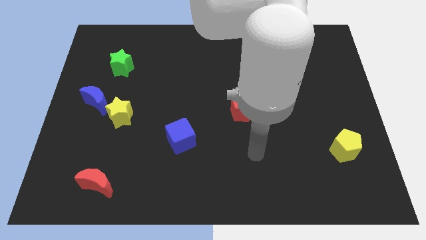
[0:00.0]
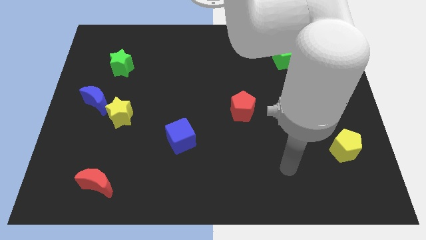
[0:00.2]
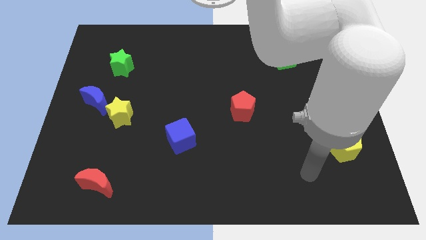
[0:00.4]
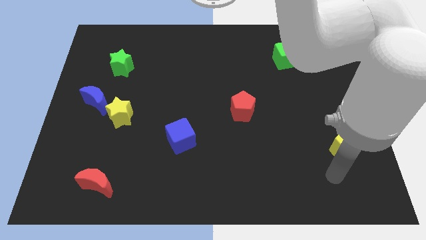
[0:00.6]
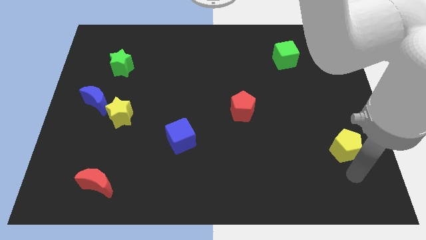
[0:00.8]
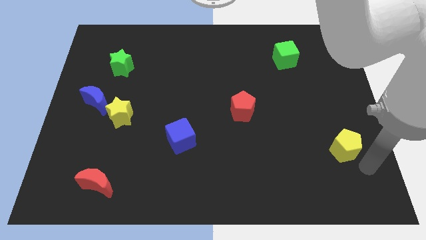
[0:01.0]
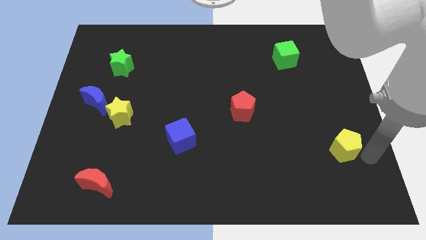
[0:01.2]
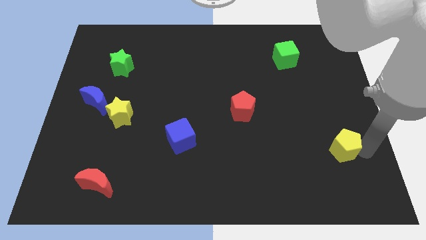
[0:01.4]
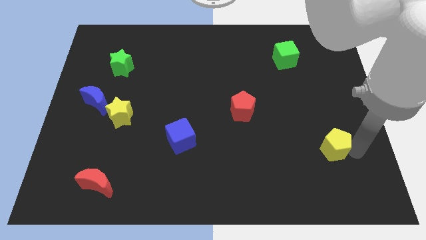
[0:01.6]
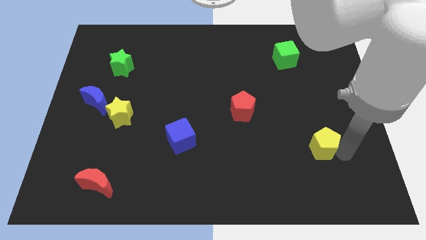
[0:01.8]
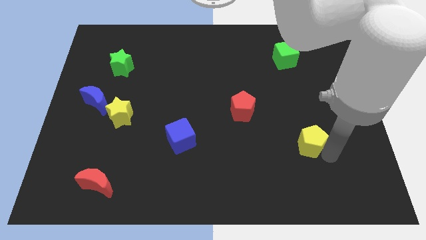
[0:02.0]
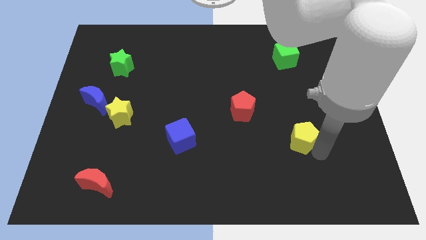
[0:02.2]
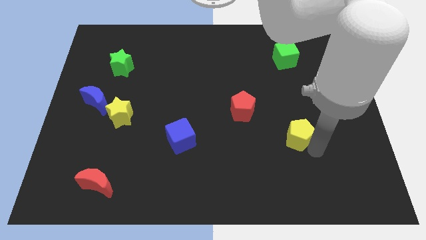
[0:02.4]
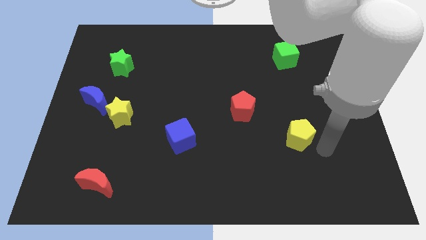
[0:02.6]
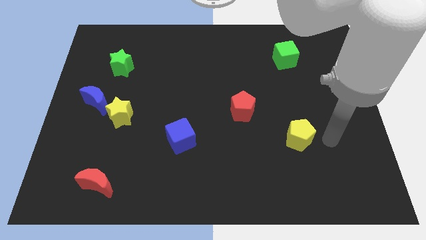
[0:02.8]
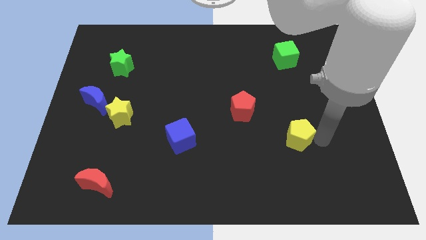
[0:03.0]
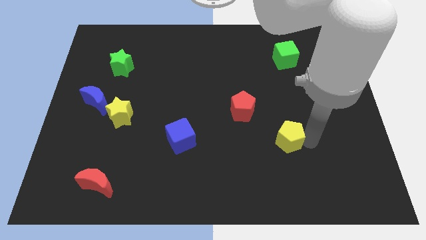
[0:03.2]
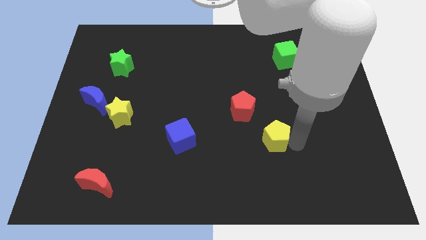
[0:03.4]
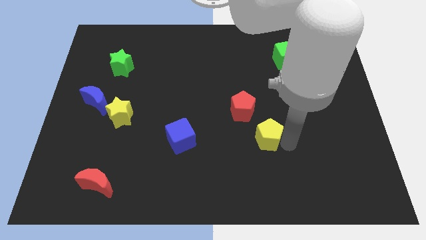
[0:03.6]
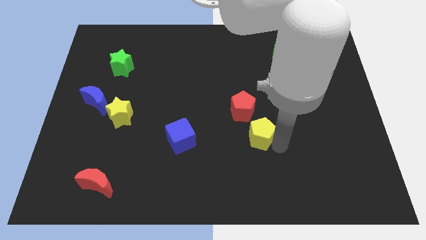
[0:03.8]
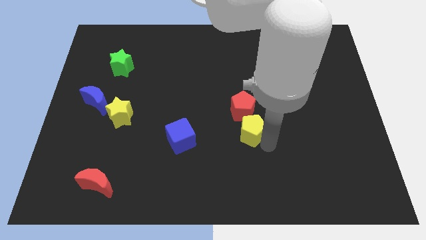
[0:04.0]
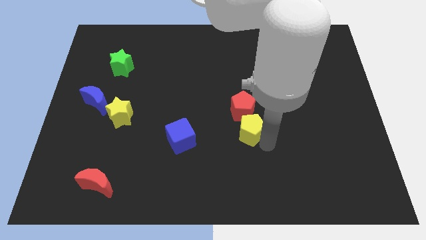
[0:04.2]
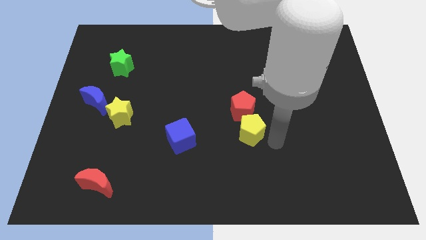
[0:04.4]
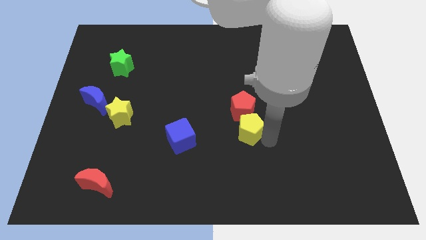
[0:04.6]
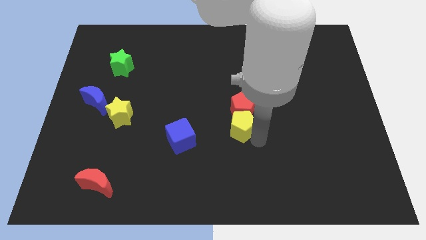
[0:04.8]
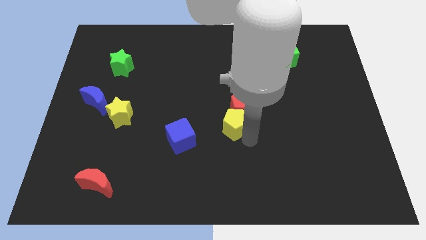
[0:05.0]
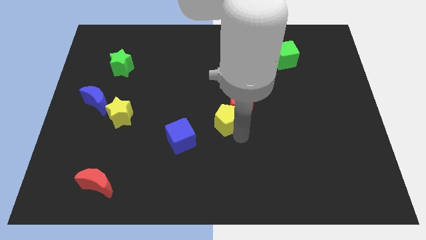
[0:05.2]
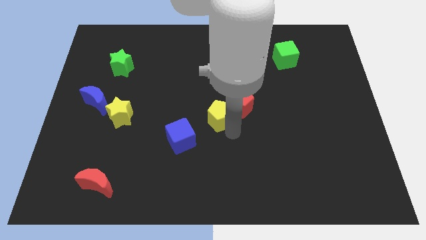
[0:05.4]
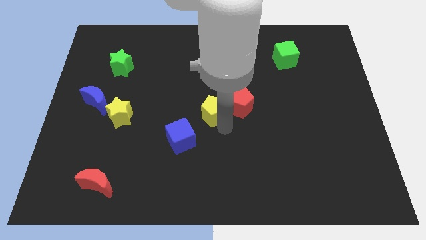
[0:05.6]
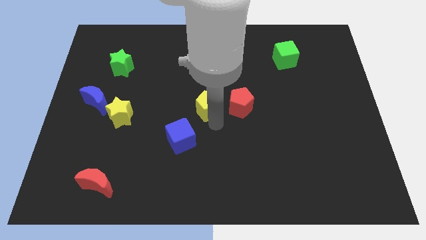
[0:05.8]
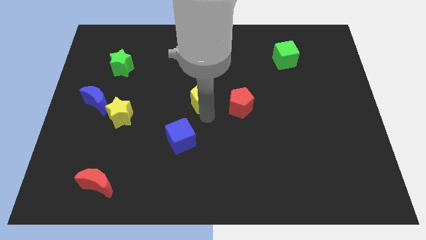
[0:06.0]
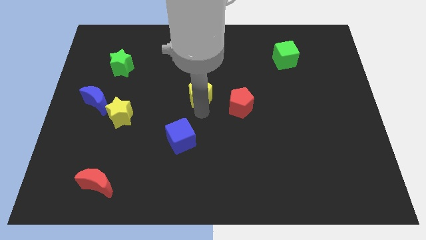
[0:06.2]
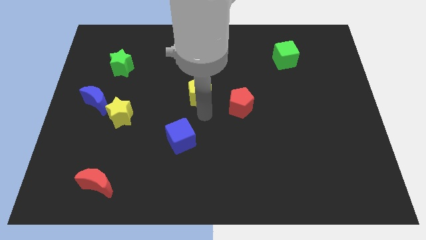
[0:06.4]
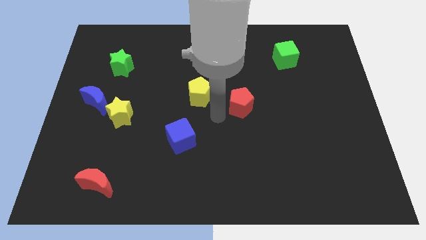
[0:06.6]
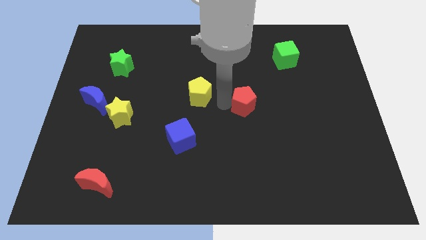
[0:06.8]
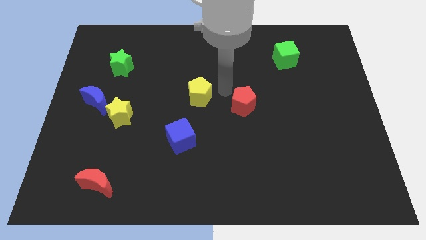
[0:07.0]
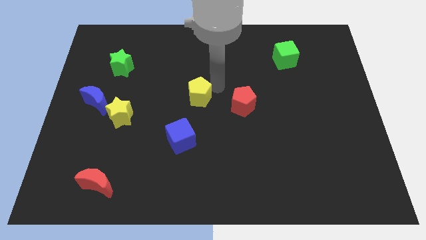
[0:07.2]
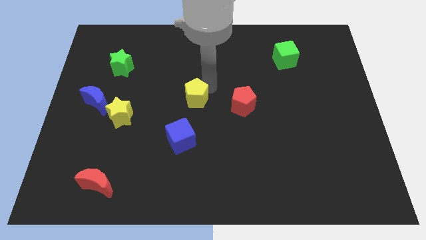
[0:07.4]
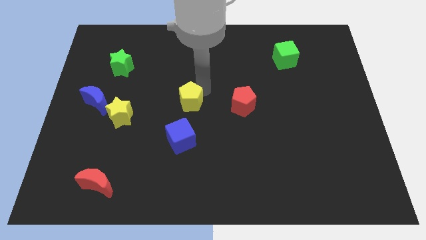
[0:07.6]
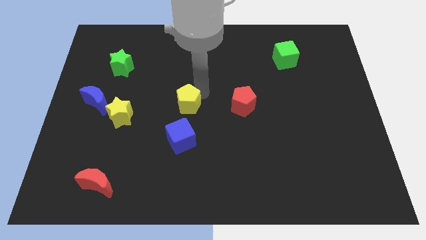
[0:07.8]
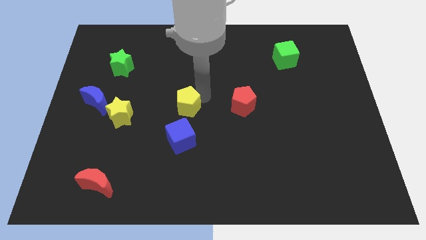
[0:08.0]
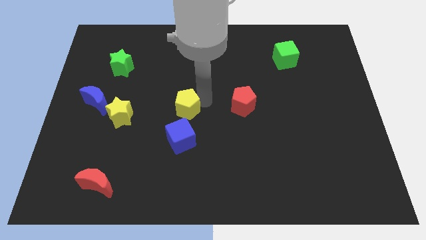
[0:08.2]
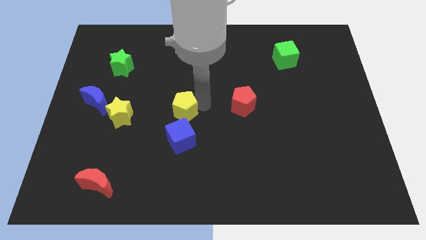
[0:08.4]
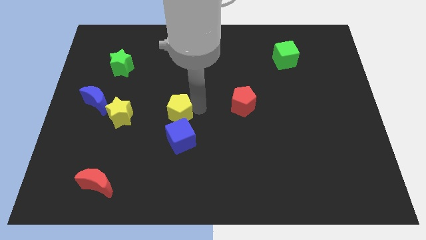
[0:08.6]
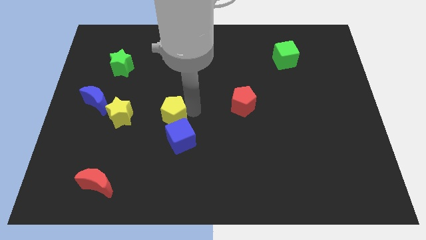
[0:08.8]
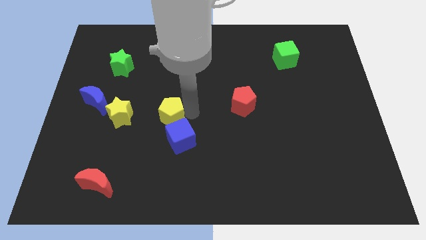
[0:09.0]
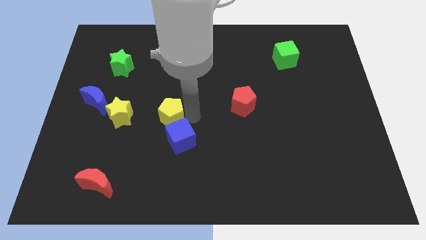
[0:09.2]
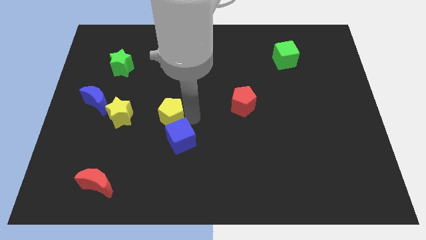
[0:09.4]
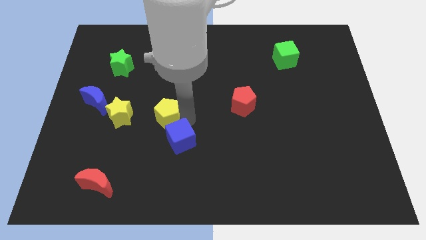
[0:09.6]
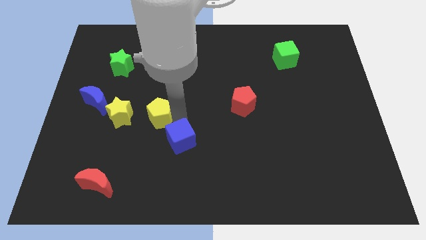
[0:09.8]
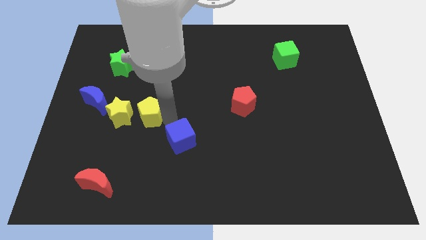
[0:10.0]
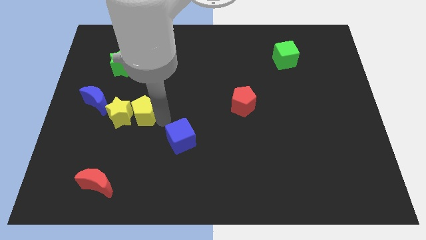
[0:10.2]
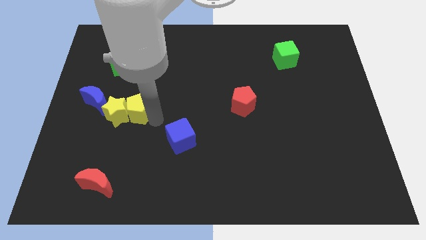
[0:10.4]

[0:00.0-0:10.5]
slide the yellow pentagon to the yellow star

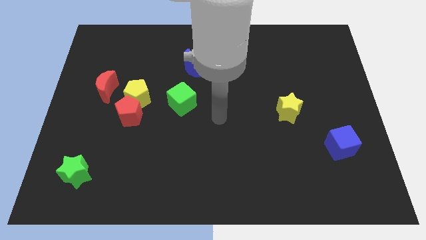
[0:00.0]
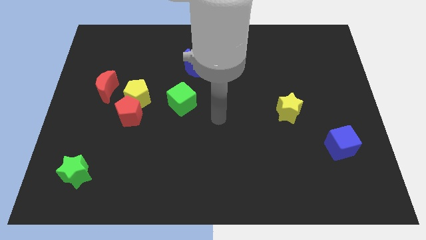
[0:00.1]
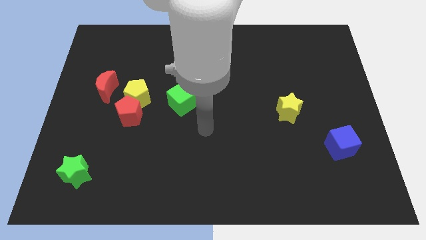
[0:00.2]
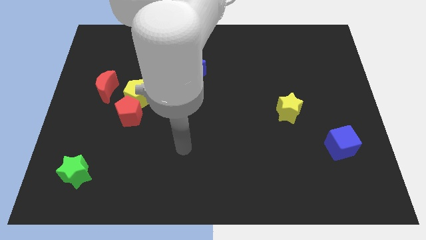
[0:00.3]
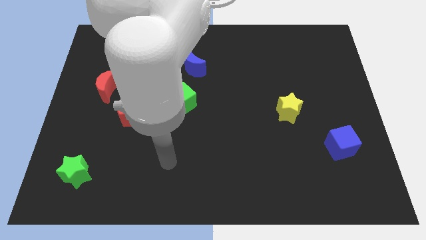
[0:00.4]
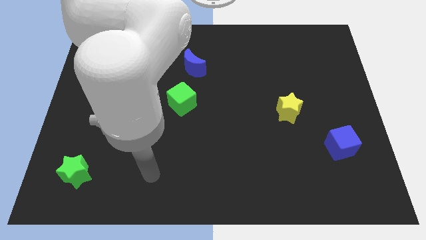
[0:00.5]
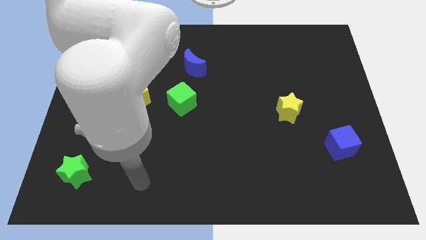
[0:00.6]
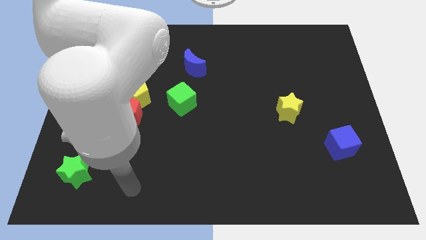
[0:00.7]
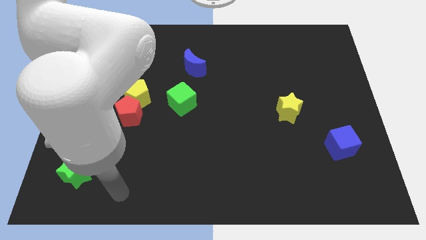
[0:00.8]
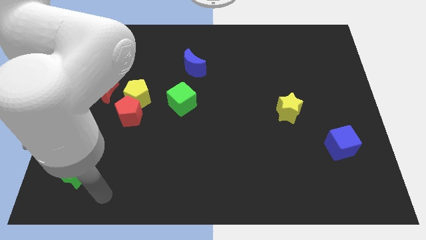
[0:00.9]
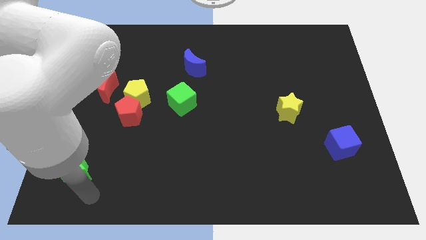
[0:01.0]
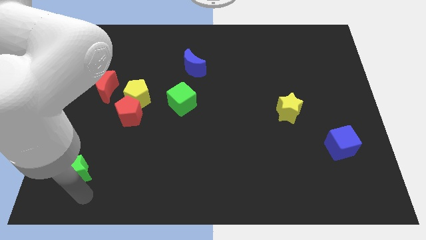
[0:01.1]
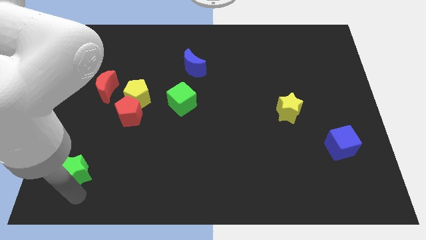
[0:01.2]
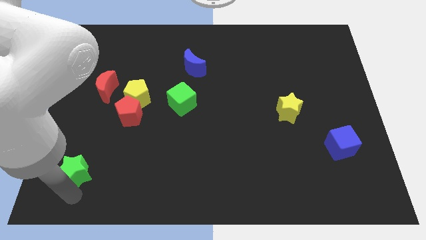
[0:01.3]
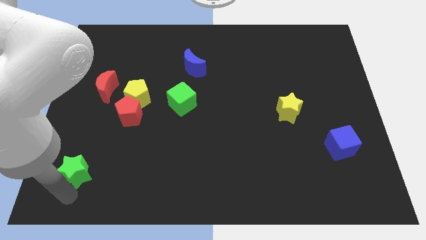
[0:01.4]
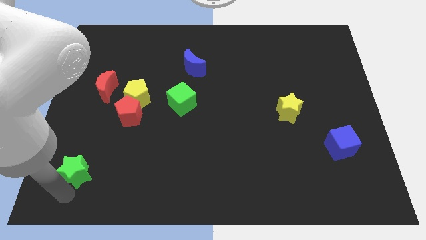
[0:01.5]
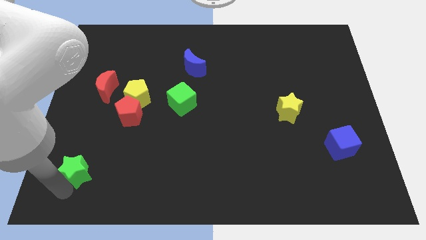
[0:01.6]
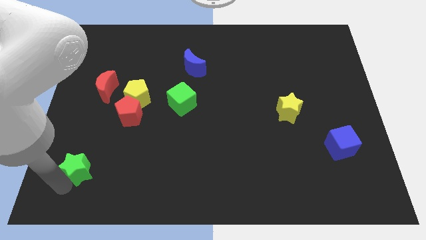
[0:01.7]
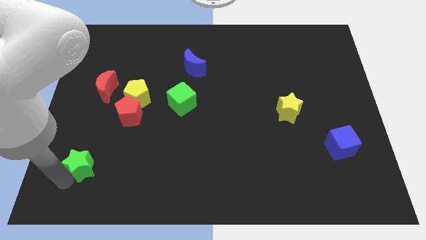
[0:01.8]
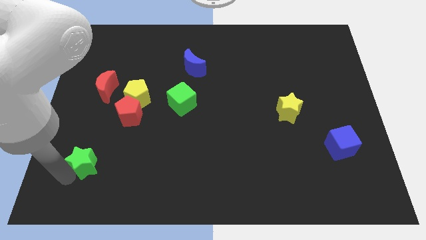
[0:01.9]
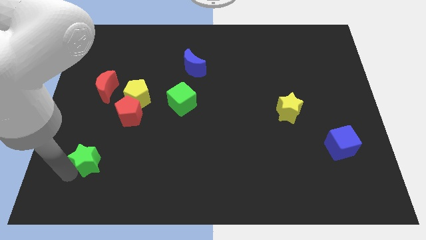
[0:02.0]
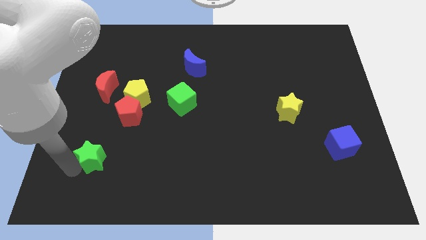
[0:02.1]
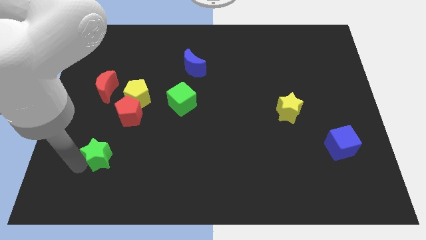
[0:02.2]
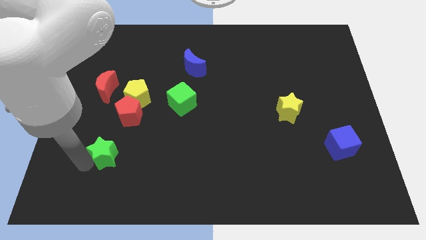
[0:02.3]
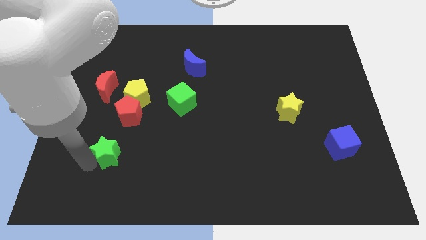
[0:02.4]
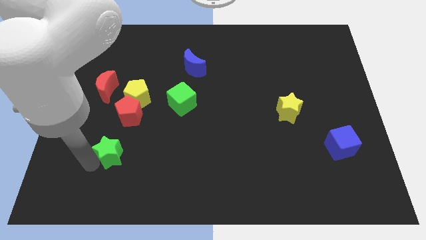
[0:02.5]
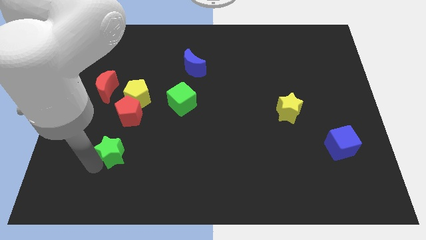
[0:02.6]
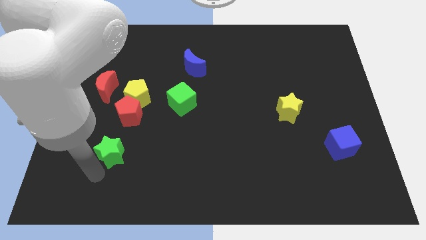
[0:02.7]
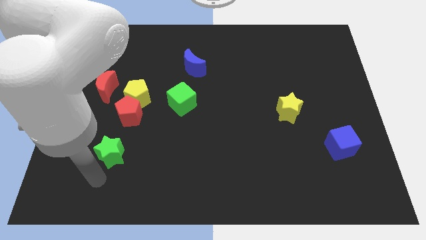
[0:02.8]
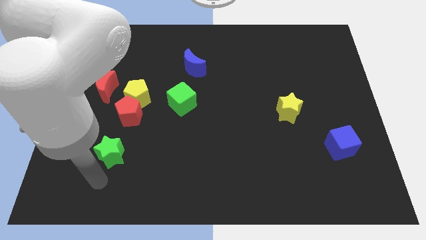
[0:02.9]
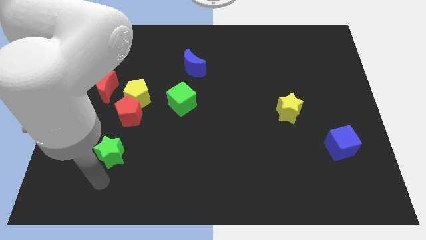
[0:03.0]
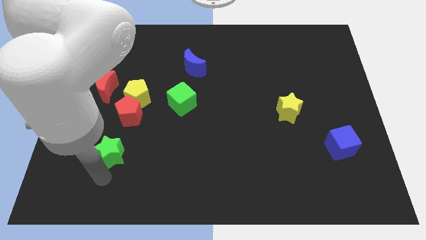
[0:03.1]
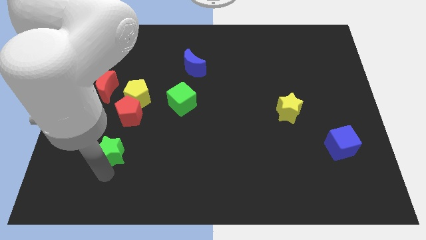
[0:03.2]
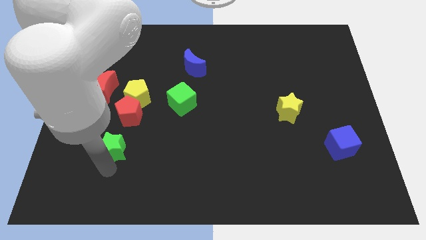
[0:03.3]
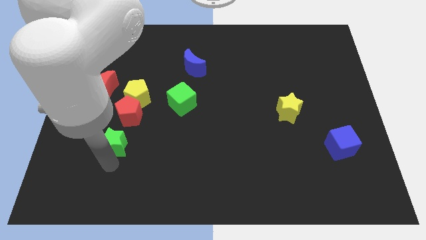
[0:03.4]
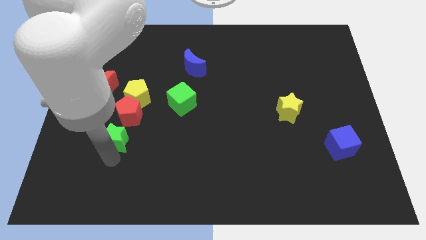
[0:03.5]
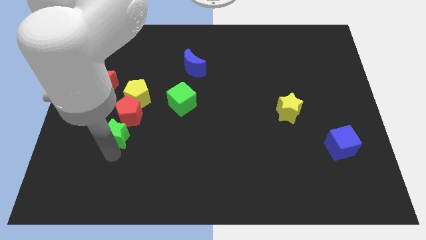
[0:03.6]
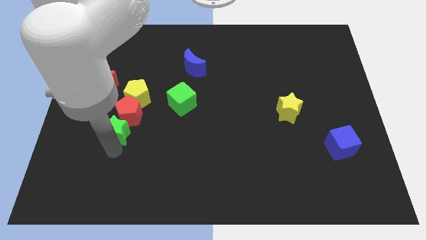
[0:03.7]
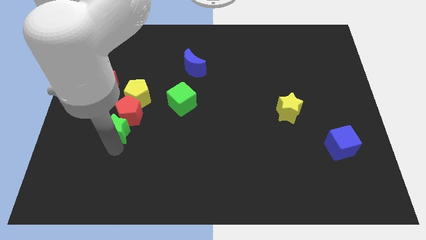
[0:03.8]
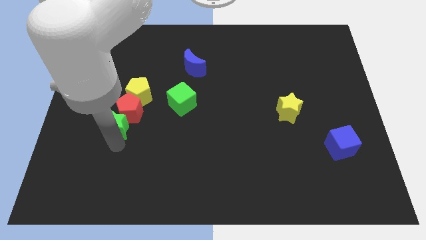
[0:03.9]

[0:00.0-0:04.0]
put the green star towards the red pentagon
